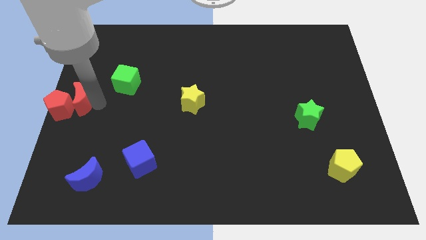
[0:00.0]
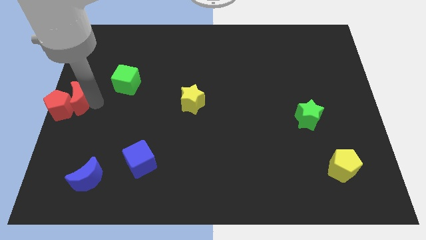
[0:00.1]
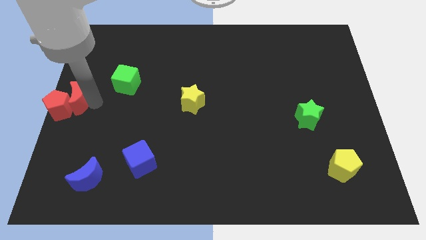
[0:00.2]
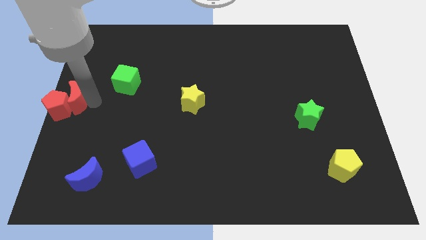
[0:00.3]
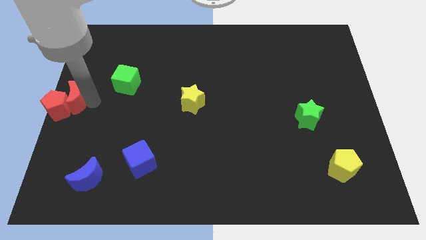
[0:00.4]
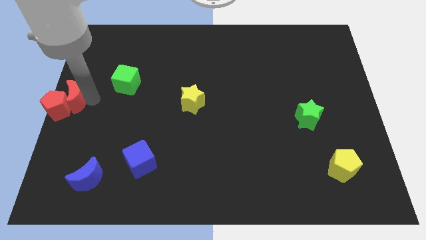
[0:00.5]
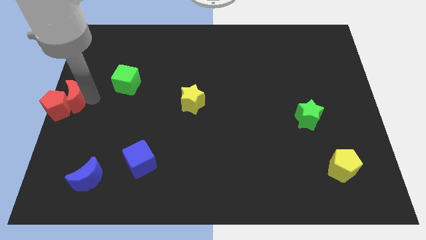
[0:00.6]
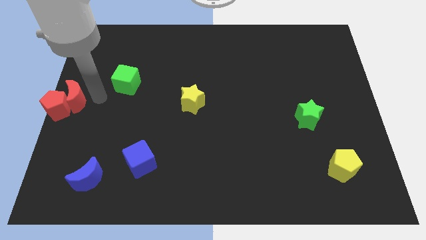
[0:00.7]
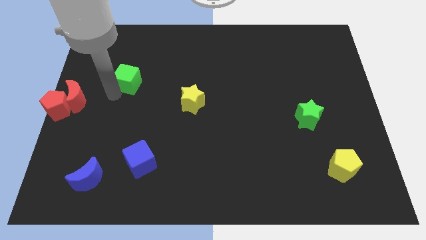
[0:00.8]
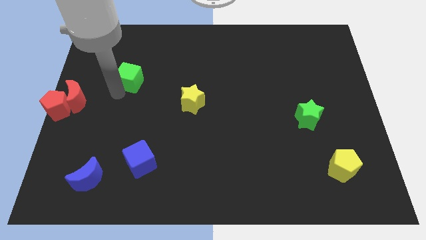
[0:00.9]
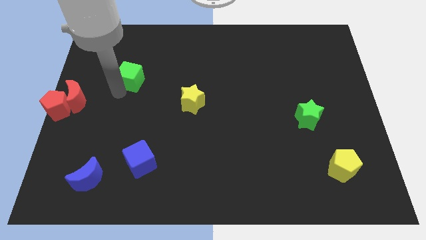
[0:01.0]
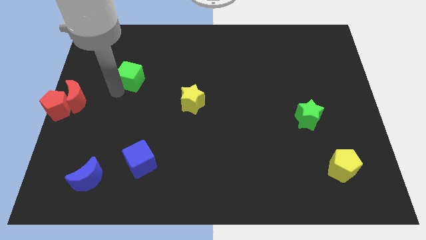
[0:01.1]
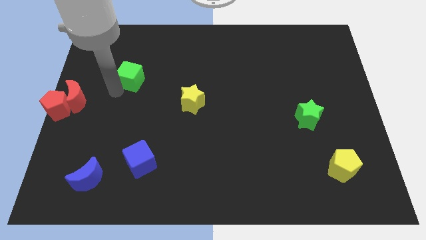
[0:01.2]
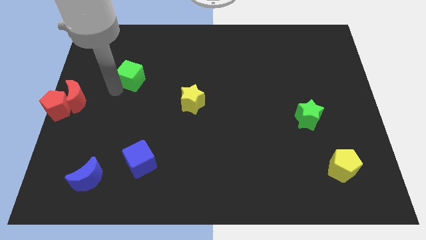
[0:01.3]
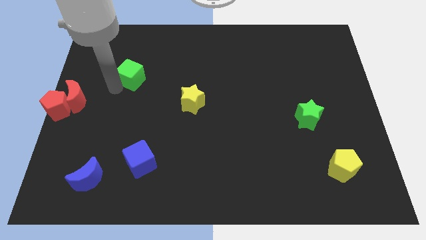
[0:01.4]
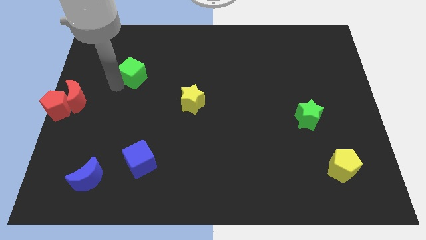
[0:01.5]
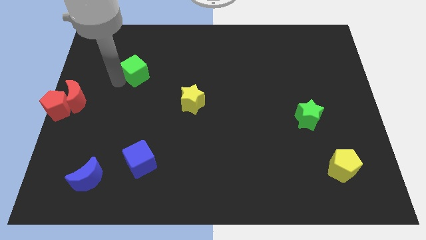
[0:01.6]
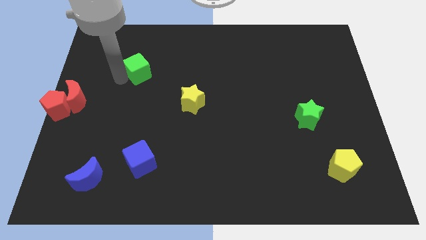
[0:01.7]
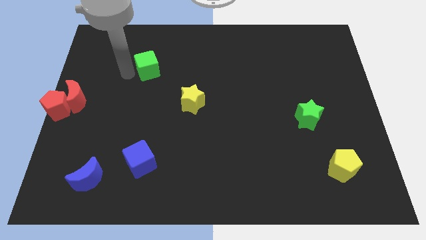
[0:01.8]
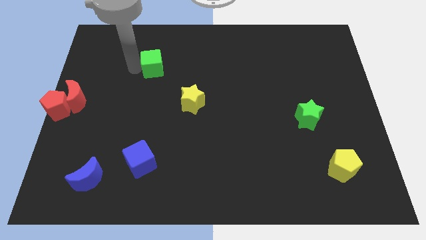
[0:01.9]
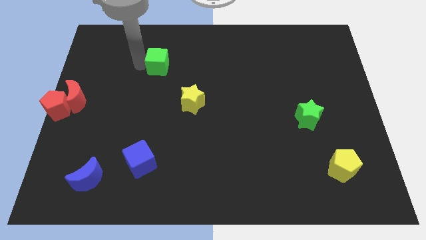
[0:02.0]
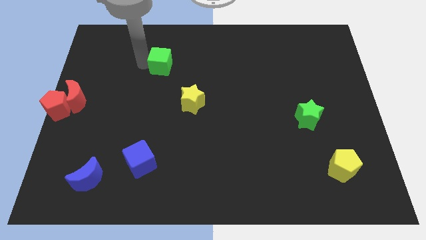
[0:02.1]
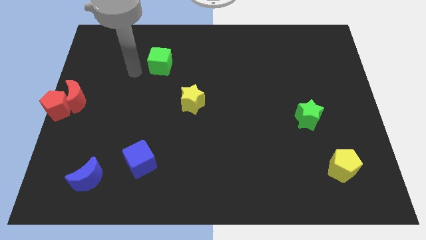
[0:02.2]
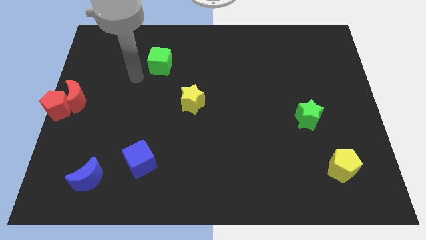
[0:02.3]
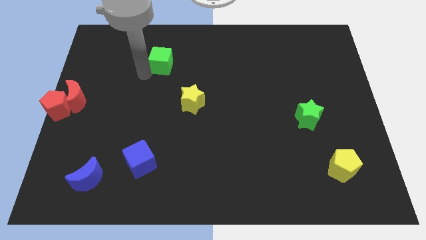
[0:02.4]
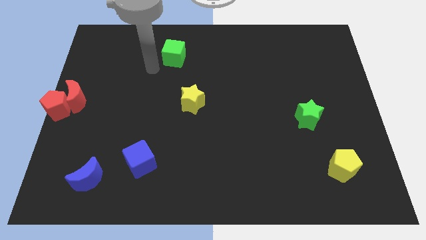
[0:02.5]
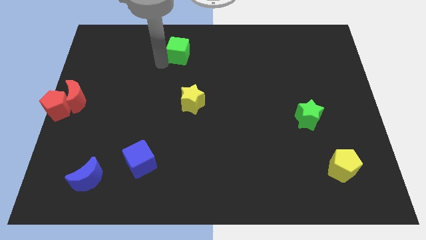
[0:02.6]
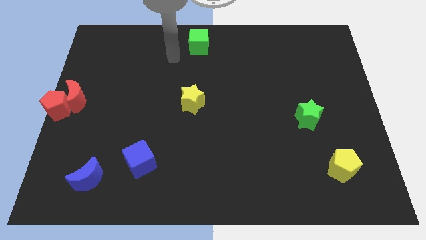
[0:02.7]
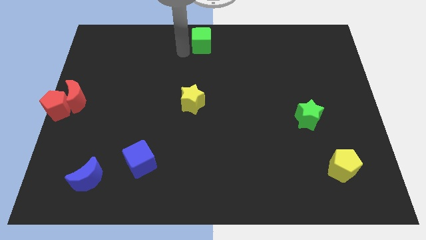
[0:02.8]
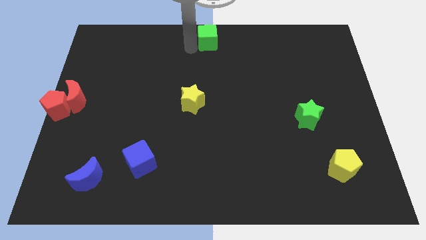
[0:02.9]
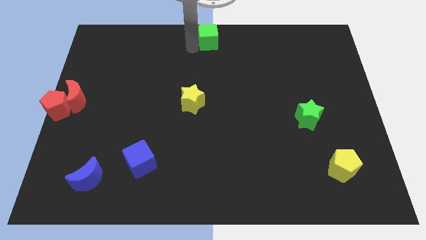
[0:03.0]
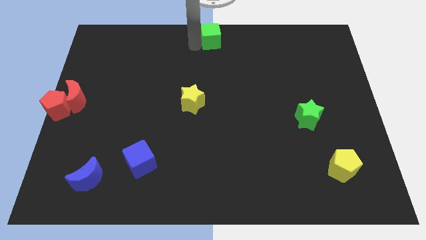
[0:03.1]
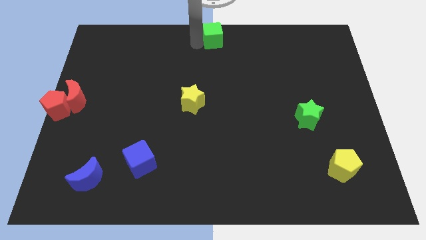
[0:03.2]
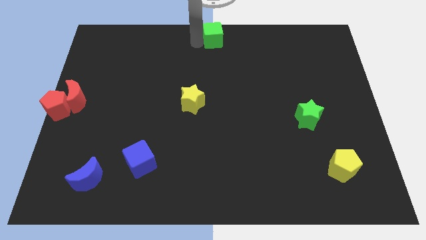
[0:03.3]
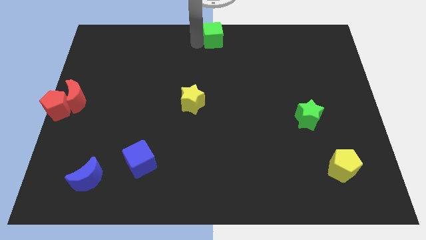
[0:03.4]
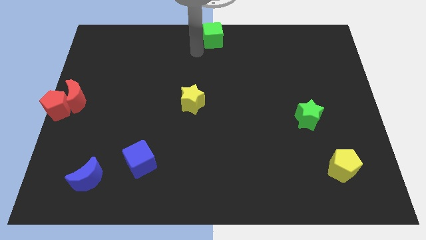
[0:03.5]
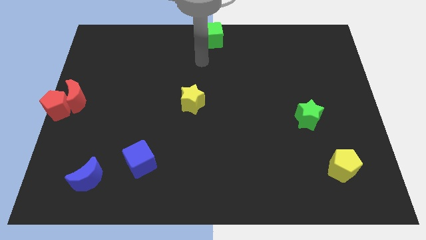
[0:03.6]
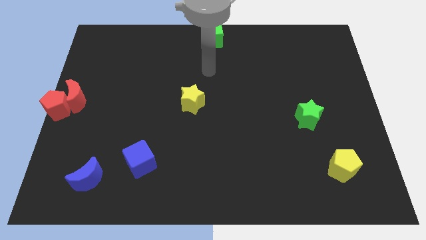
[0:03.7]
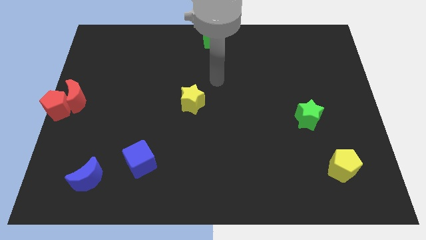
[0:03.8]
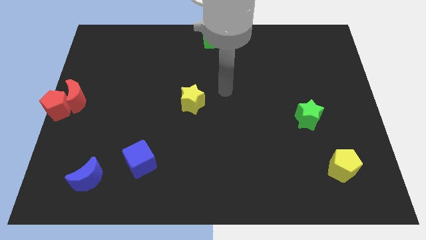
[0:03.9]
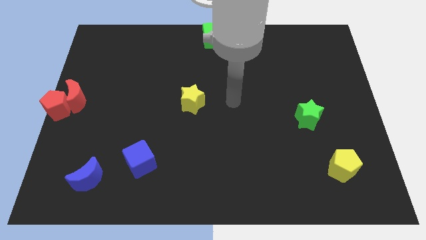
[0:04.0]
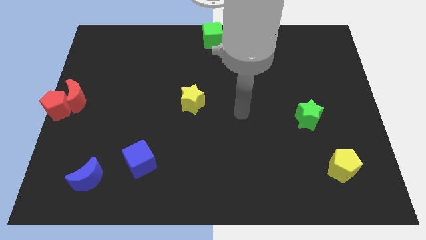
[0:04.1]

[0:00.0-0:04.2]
move the green cube towards the top center of the board

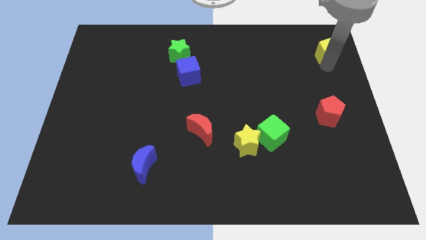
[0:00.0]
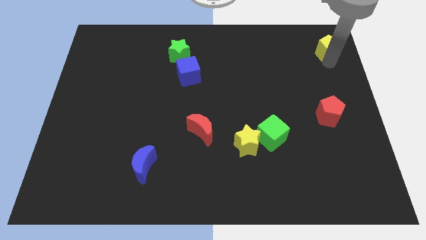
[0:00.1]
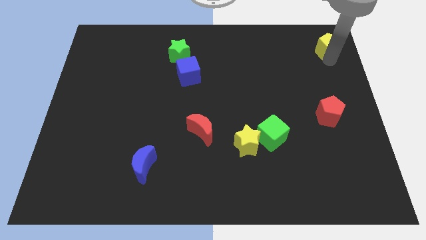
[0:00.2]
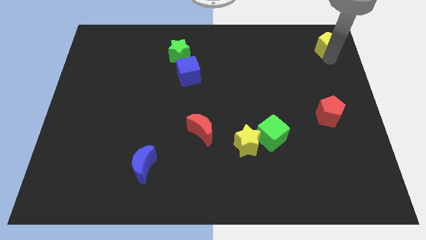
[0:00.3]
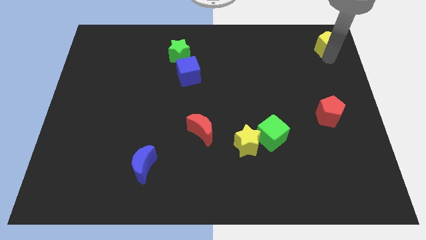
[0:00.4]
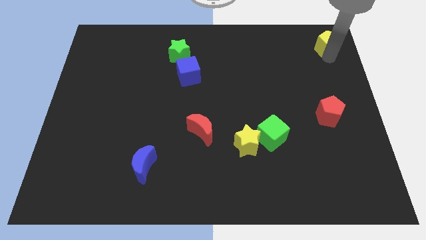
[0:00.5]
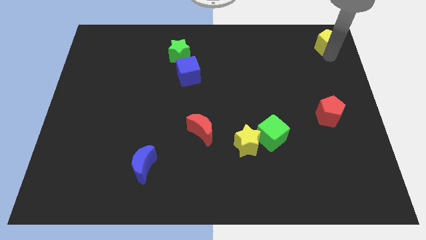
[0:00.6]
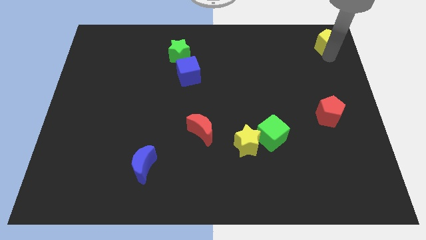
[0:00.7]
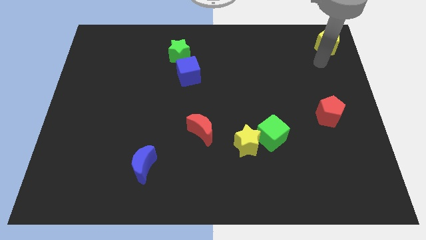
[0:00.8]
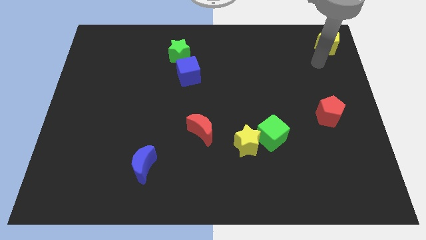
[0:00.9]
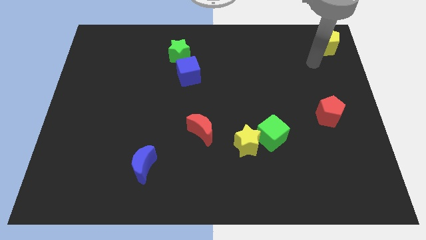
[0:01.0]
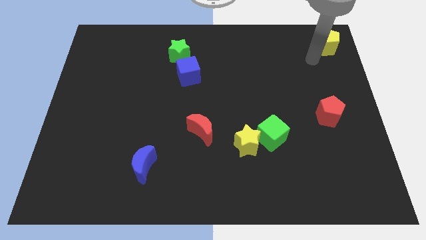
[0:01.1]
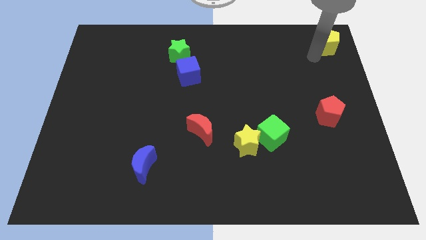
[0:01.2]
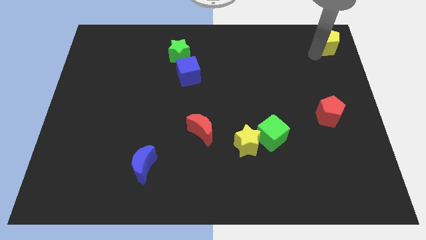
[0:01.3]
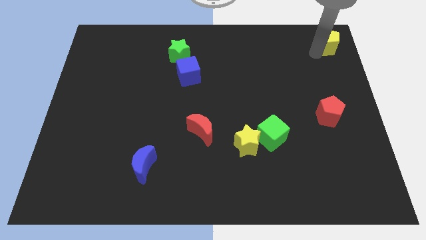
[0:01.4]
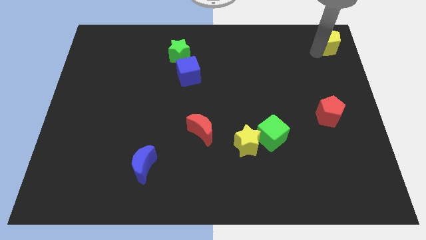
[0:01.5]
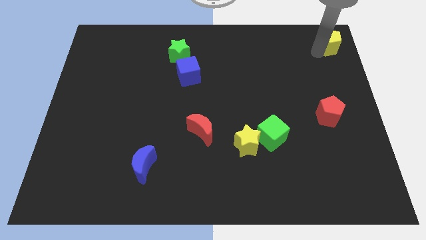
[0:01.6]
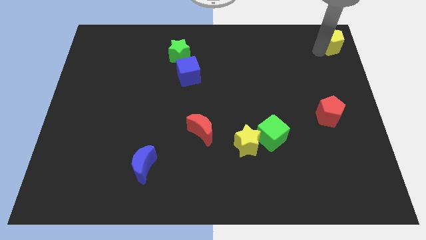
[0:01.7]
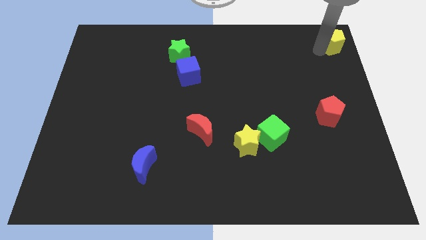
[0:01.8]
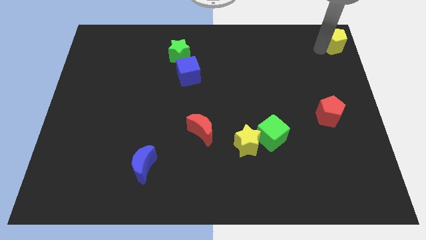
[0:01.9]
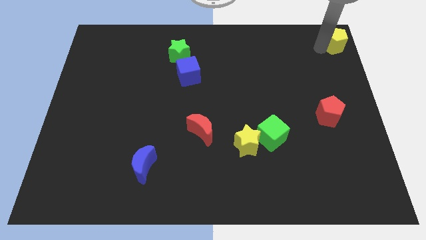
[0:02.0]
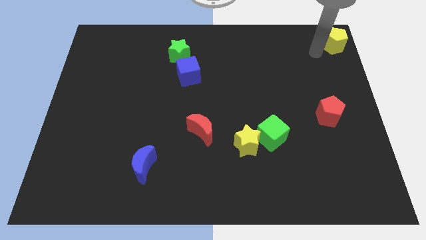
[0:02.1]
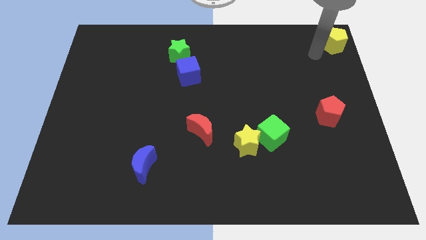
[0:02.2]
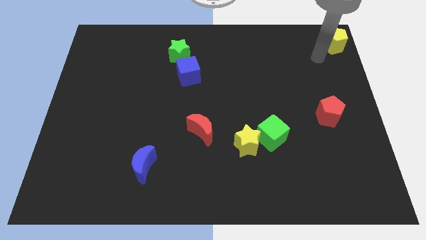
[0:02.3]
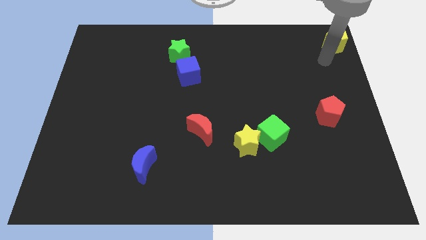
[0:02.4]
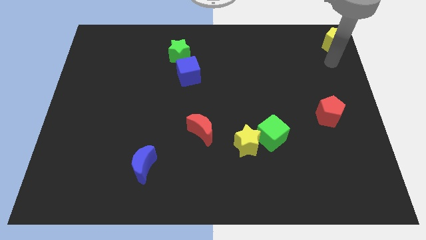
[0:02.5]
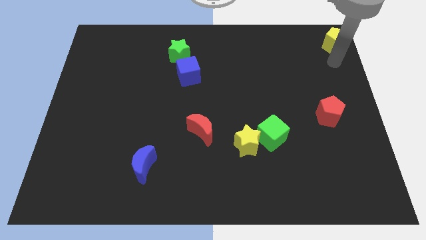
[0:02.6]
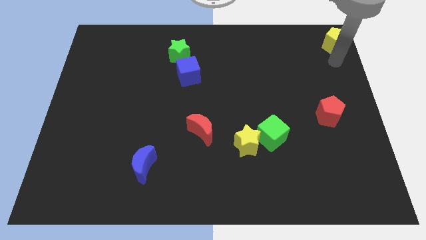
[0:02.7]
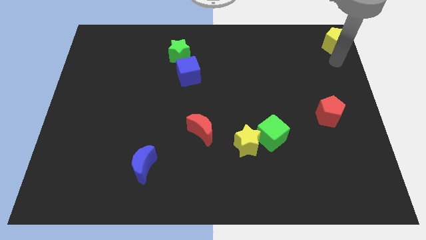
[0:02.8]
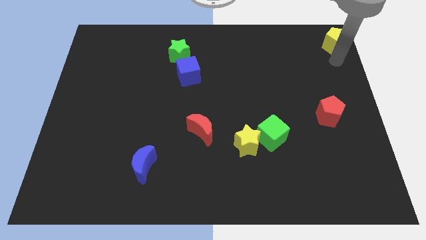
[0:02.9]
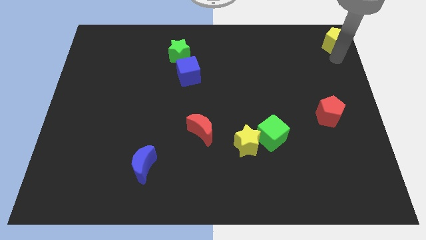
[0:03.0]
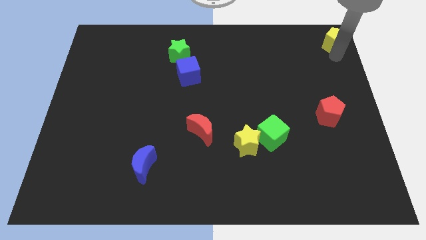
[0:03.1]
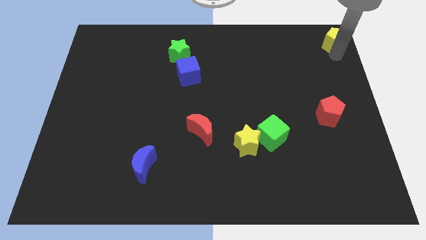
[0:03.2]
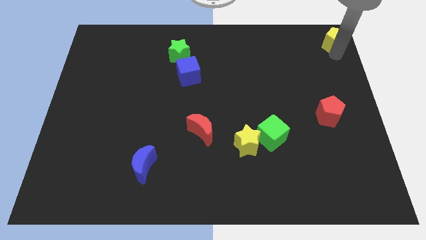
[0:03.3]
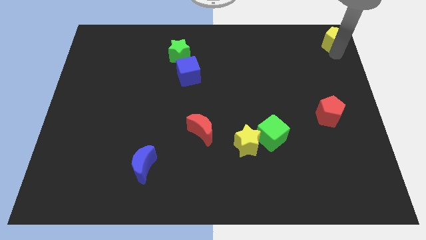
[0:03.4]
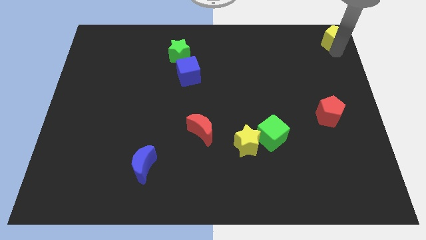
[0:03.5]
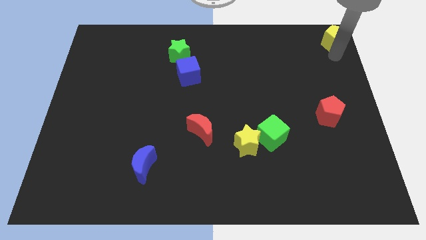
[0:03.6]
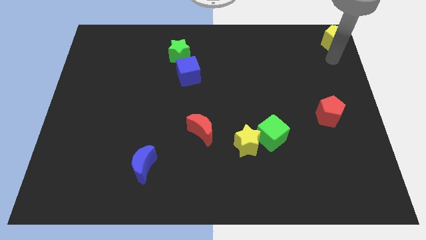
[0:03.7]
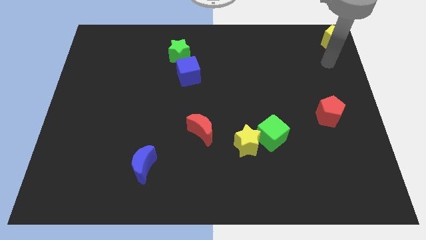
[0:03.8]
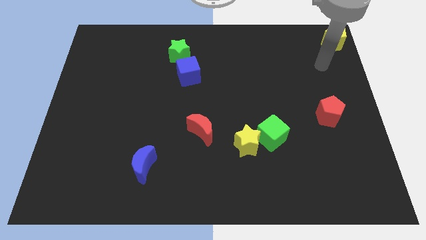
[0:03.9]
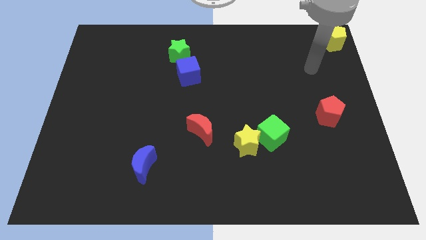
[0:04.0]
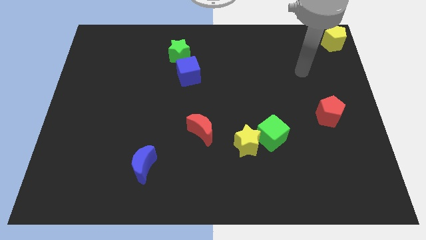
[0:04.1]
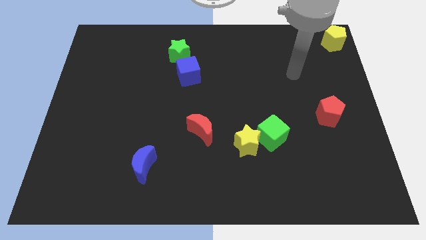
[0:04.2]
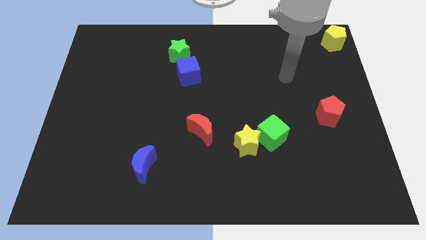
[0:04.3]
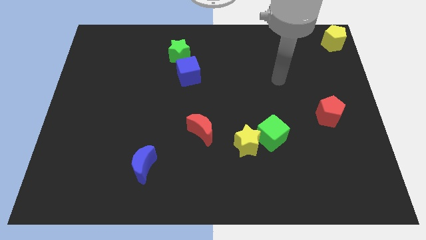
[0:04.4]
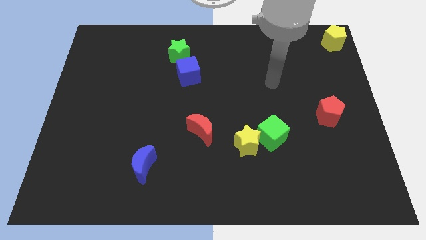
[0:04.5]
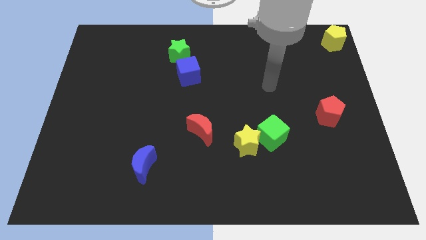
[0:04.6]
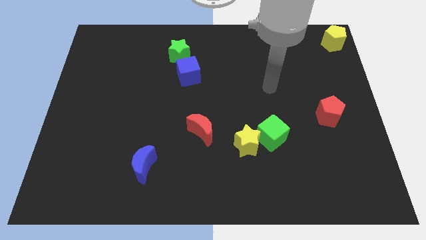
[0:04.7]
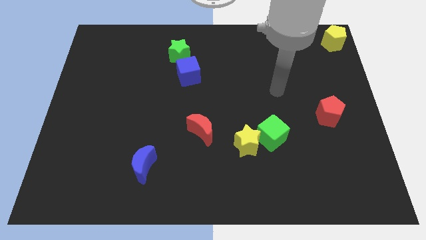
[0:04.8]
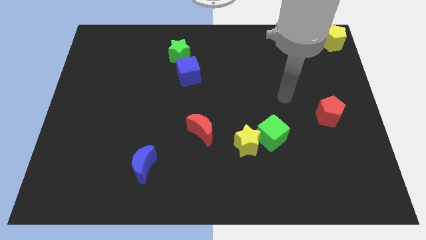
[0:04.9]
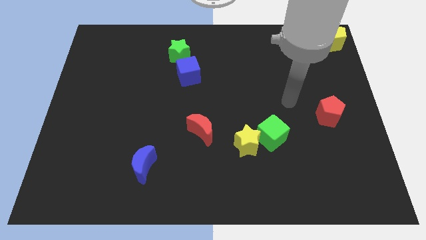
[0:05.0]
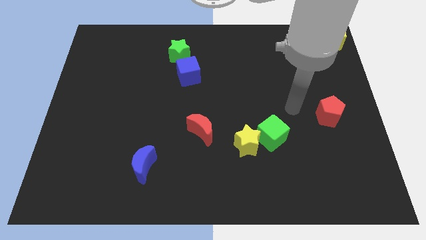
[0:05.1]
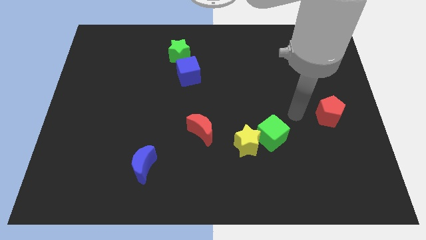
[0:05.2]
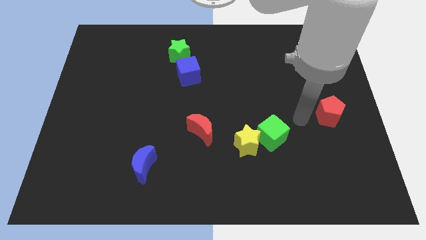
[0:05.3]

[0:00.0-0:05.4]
move your arm towards the left side of the red pentagon
